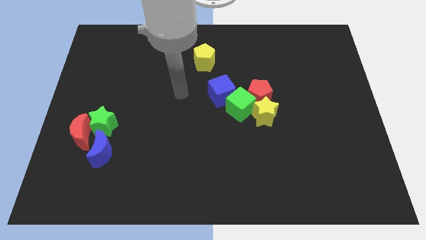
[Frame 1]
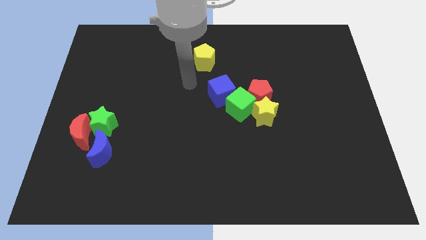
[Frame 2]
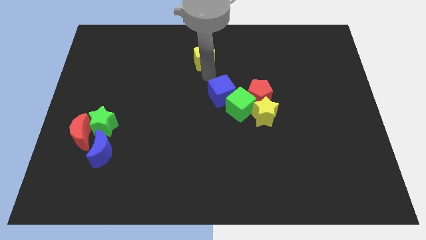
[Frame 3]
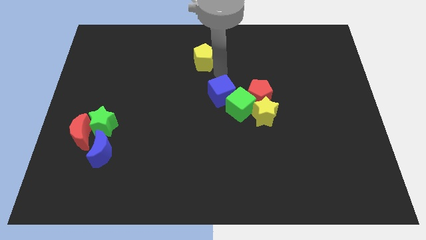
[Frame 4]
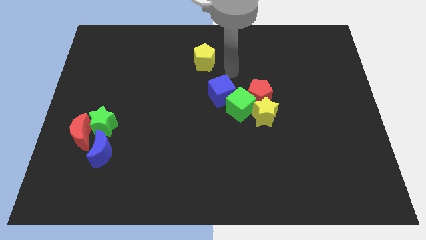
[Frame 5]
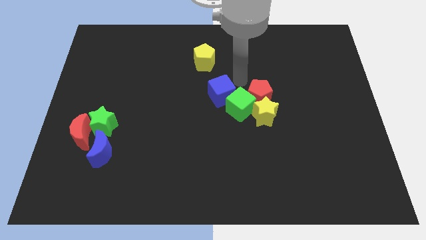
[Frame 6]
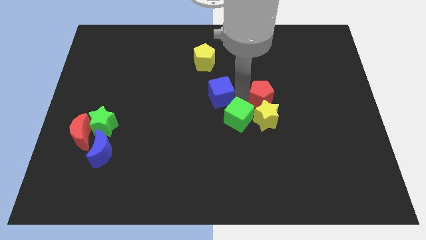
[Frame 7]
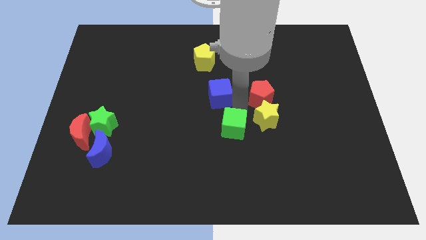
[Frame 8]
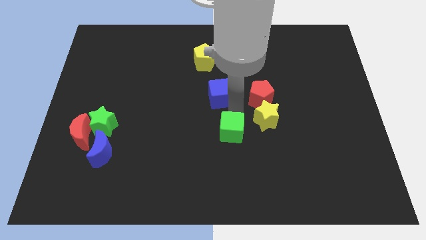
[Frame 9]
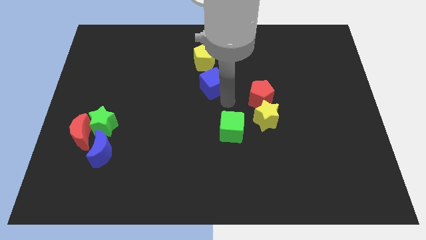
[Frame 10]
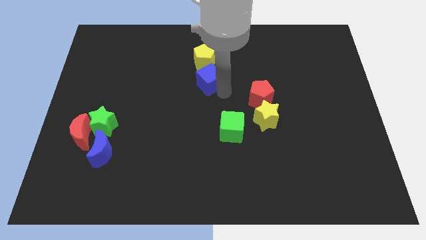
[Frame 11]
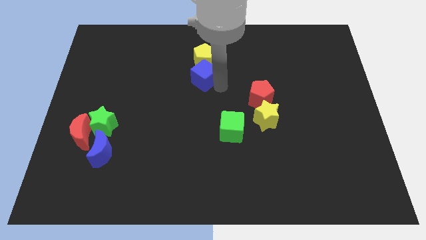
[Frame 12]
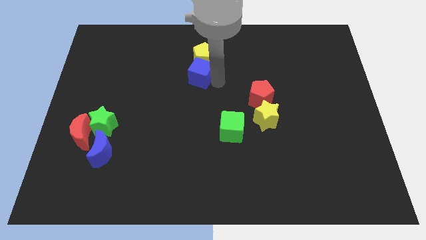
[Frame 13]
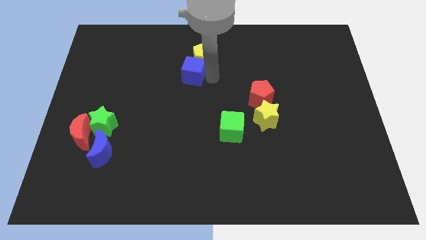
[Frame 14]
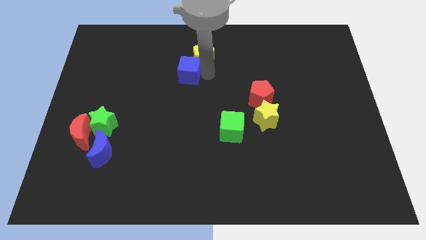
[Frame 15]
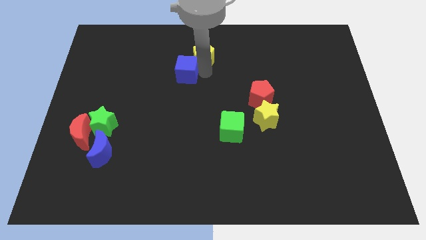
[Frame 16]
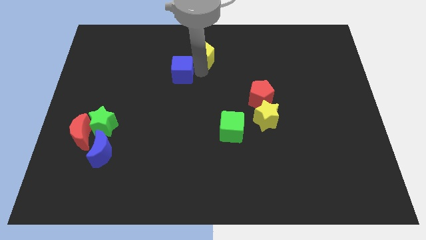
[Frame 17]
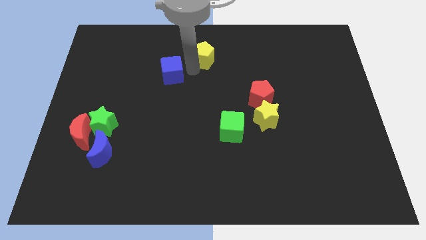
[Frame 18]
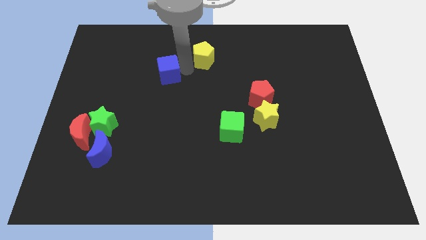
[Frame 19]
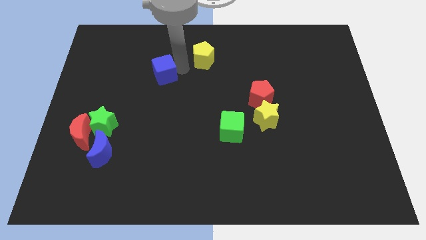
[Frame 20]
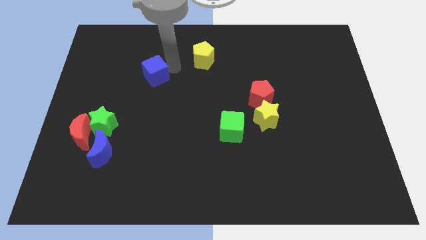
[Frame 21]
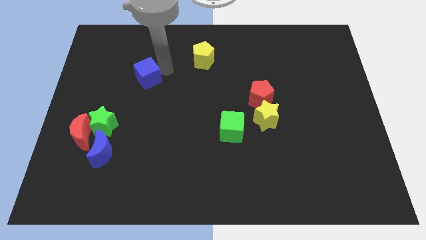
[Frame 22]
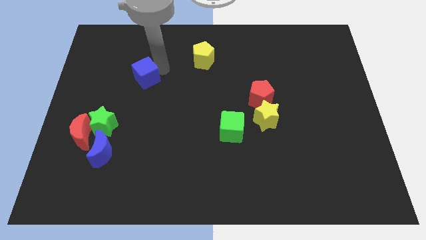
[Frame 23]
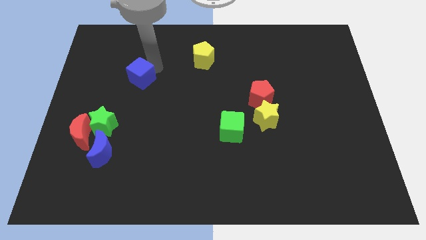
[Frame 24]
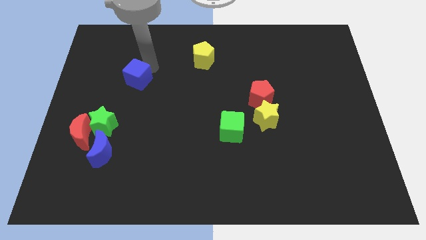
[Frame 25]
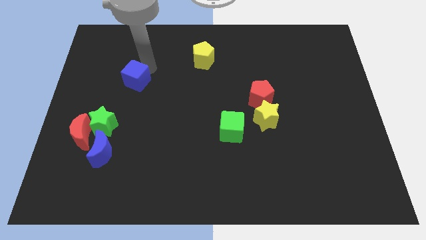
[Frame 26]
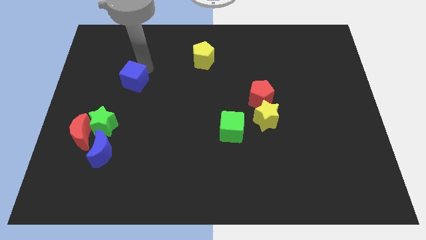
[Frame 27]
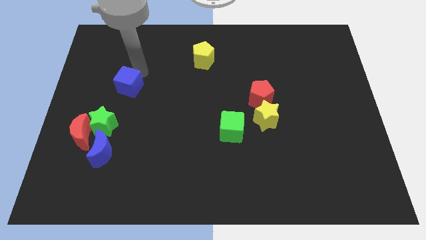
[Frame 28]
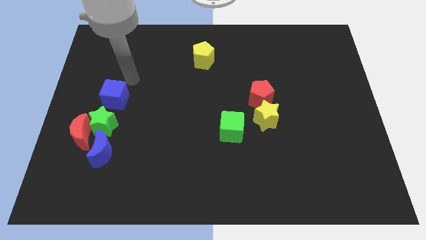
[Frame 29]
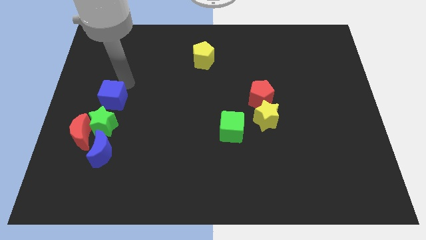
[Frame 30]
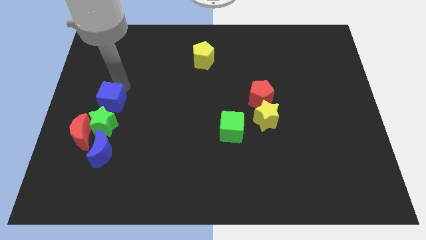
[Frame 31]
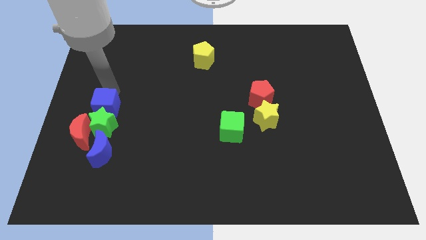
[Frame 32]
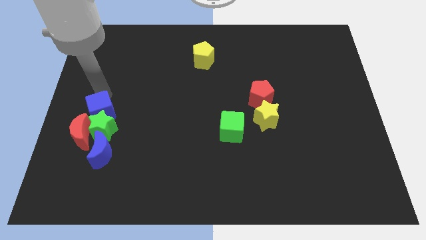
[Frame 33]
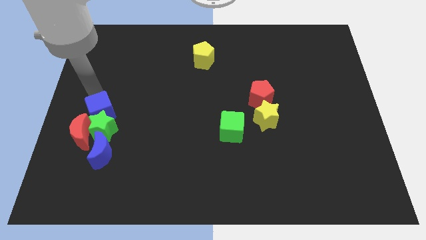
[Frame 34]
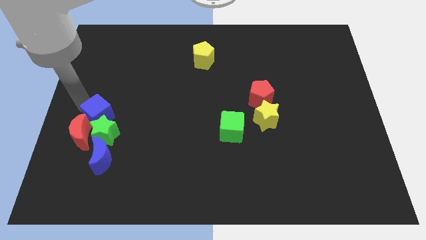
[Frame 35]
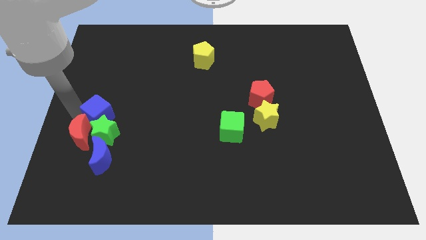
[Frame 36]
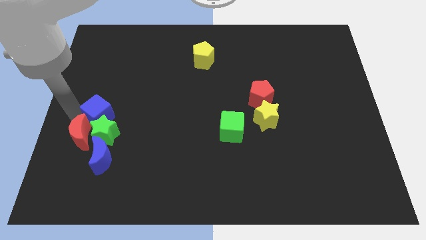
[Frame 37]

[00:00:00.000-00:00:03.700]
move the blue cube to the red moon

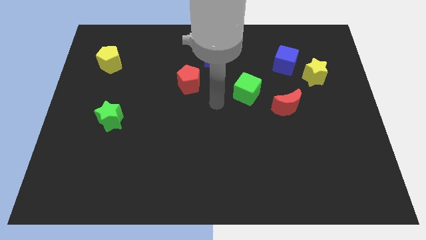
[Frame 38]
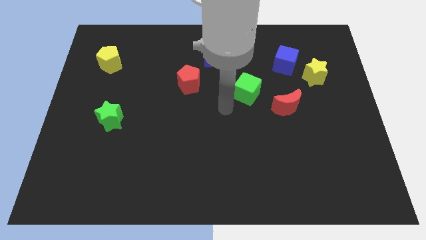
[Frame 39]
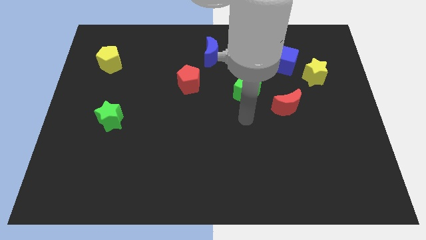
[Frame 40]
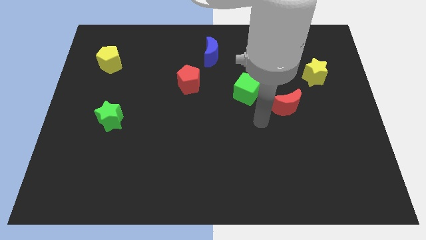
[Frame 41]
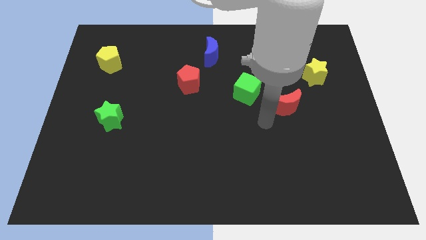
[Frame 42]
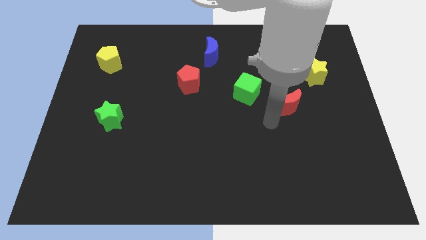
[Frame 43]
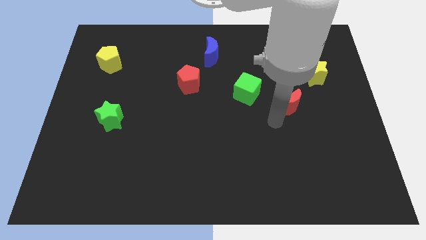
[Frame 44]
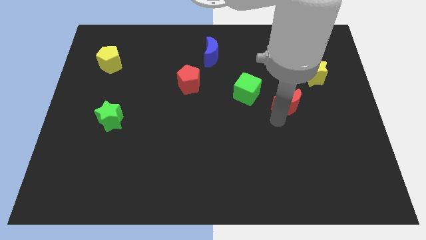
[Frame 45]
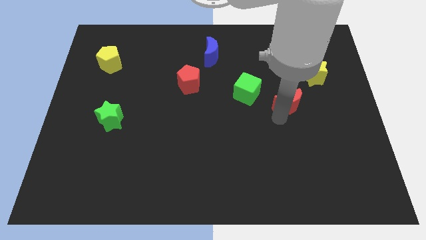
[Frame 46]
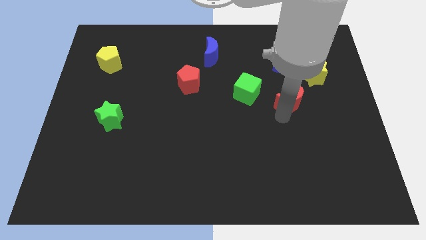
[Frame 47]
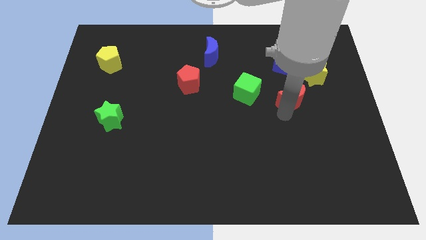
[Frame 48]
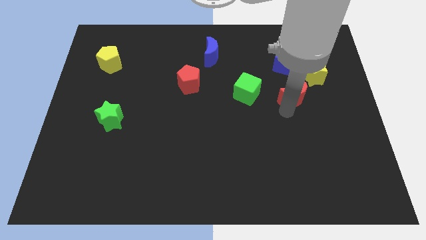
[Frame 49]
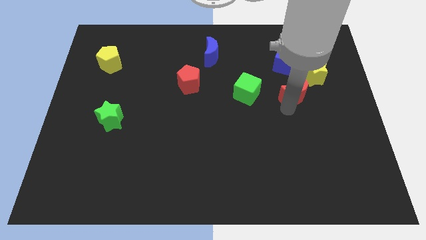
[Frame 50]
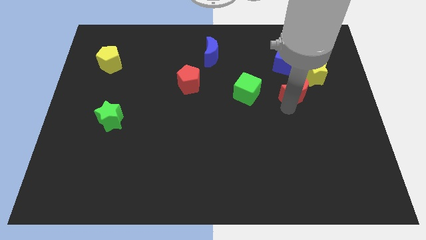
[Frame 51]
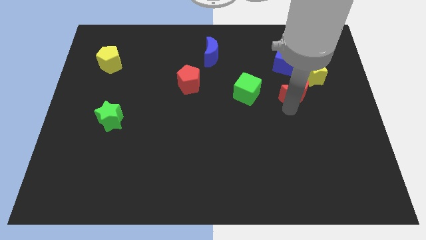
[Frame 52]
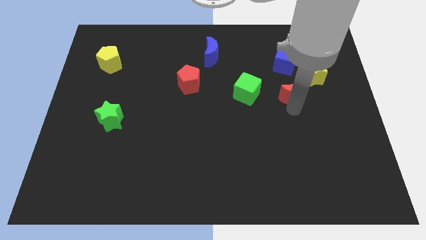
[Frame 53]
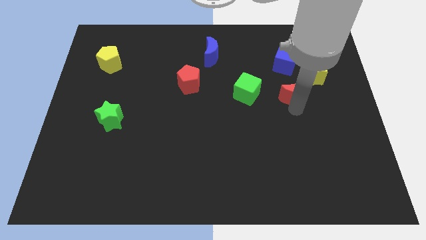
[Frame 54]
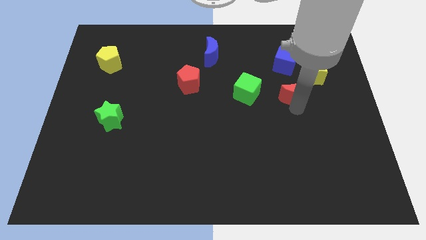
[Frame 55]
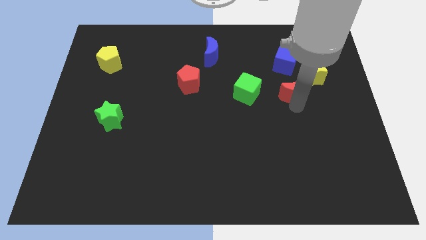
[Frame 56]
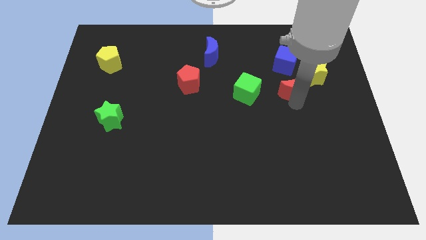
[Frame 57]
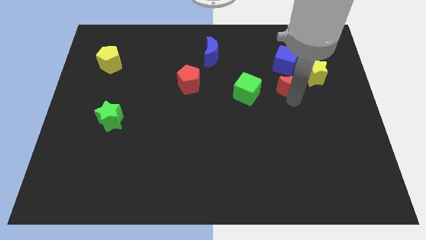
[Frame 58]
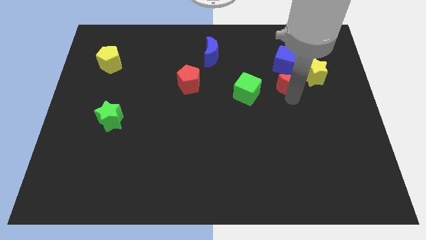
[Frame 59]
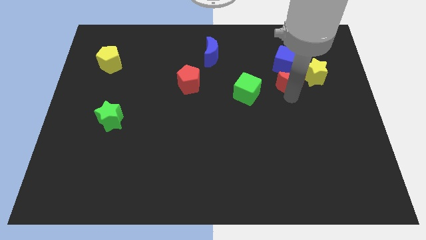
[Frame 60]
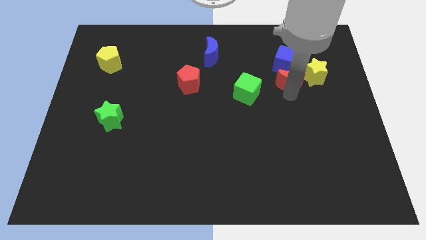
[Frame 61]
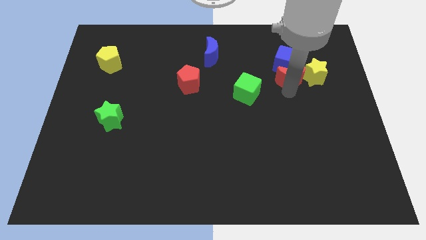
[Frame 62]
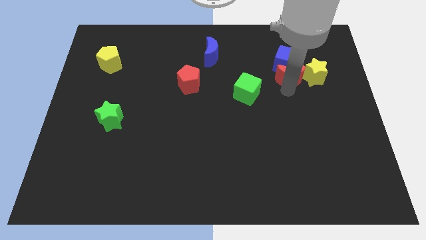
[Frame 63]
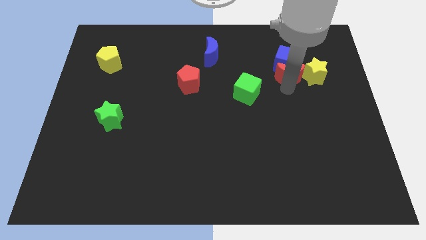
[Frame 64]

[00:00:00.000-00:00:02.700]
slide the red moon next to the blue cube

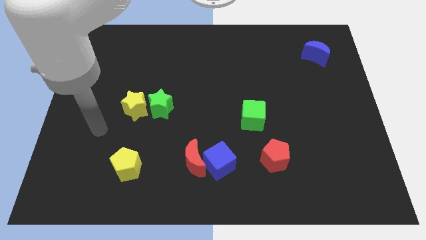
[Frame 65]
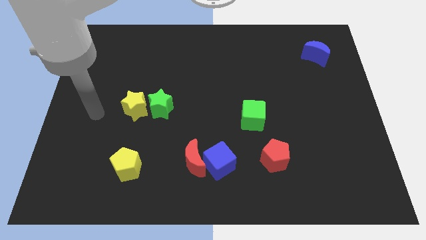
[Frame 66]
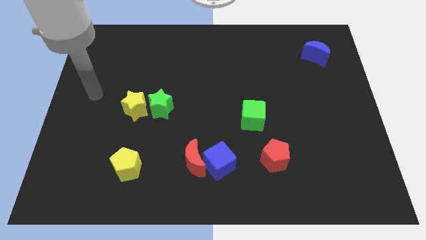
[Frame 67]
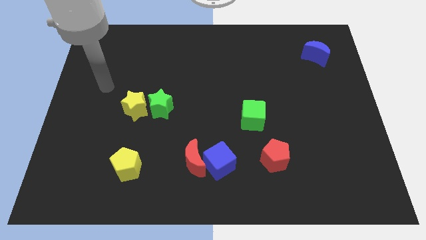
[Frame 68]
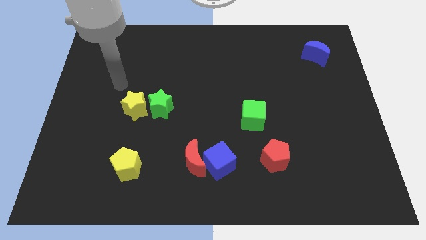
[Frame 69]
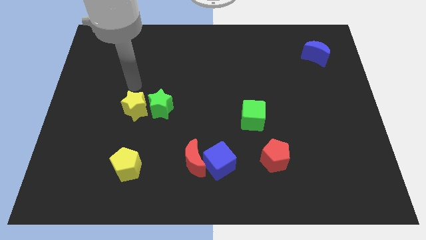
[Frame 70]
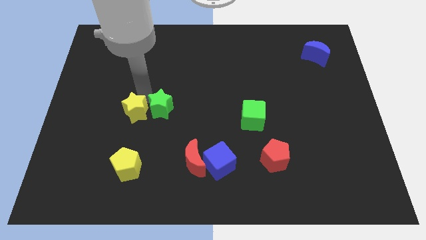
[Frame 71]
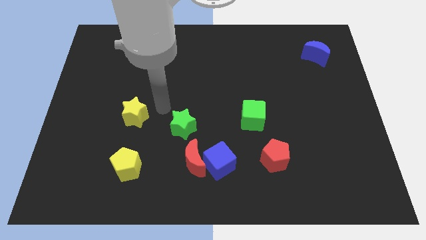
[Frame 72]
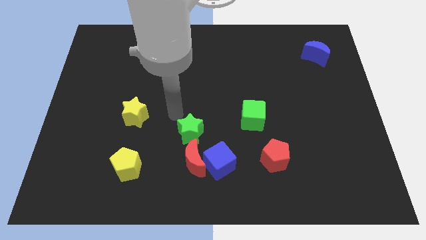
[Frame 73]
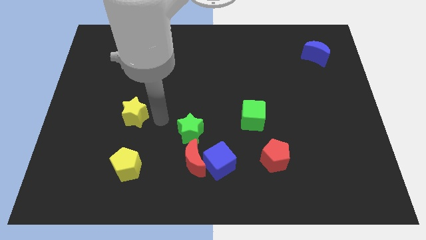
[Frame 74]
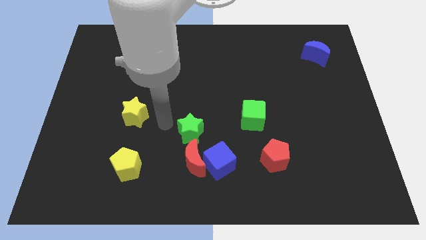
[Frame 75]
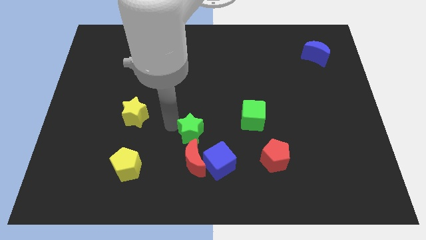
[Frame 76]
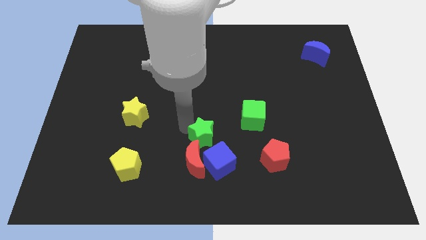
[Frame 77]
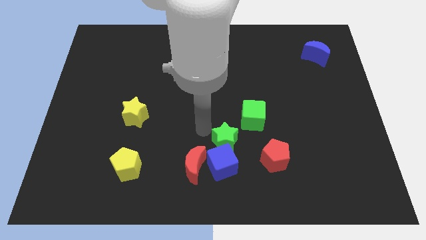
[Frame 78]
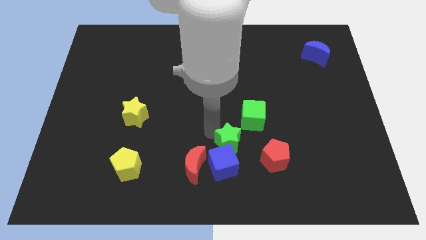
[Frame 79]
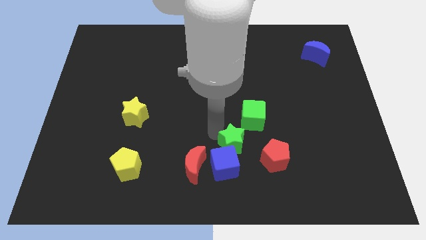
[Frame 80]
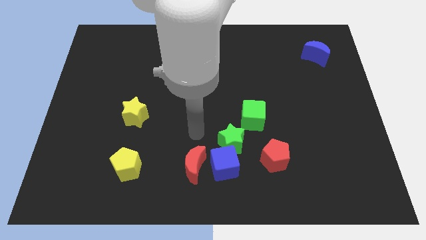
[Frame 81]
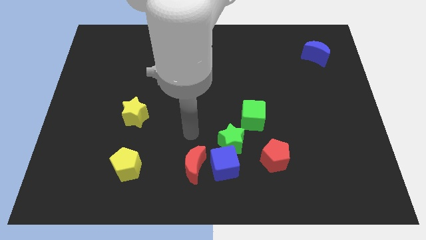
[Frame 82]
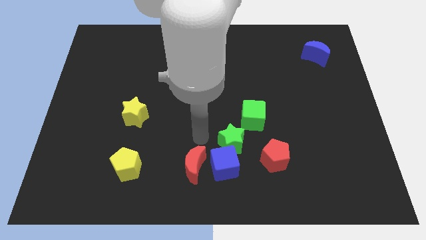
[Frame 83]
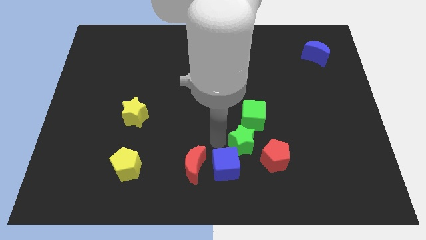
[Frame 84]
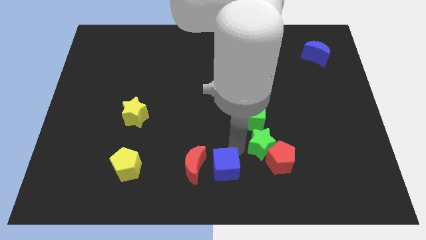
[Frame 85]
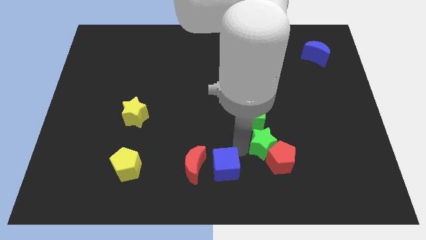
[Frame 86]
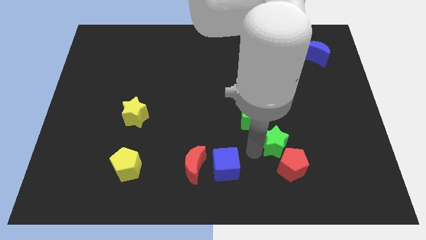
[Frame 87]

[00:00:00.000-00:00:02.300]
slide the green star towards the red pentagon
